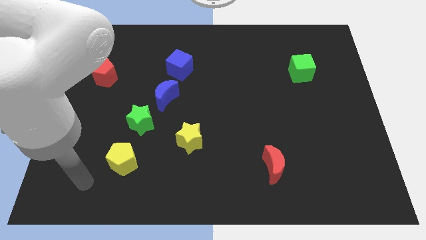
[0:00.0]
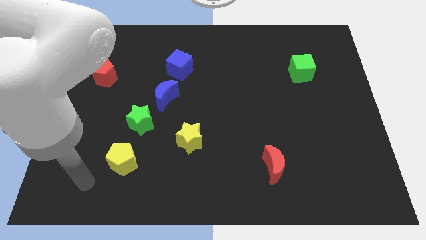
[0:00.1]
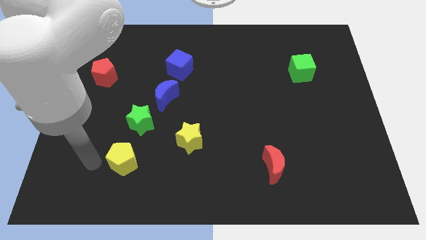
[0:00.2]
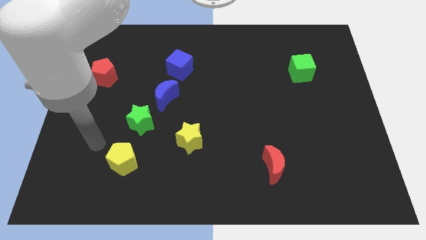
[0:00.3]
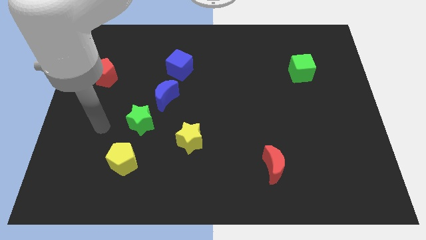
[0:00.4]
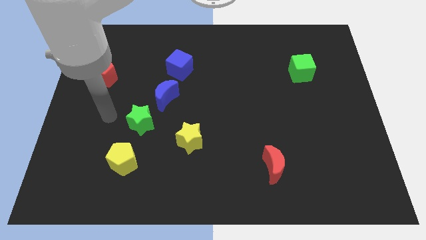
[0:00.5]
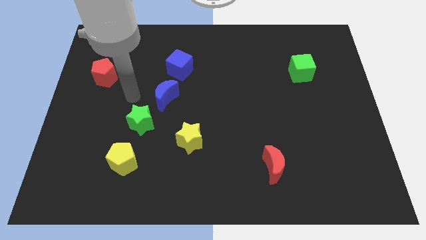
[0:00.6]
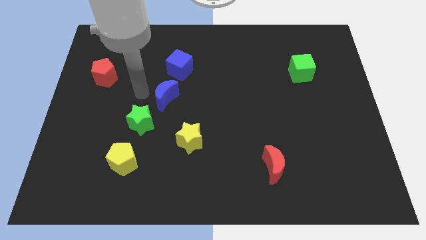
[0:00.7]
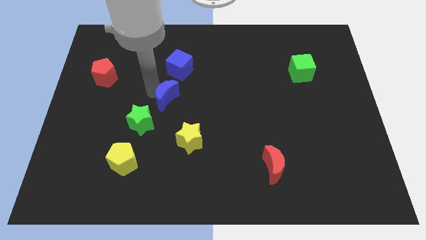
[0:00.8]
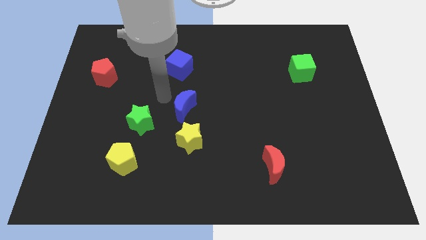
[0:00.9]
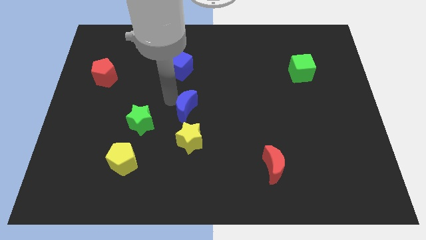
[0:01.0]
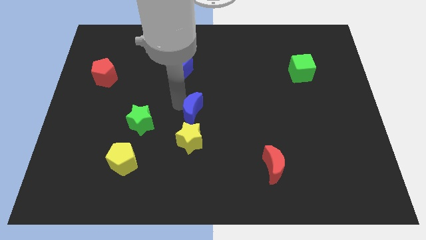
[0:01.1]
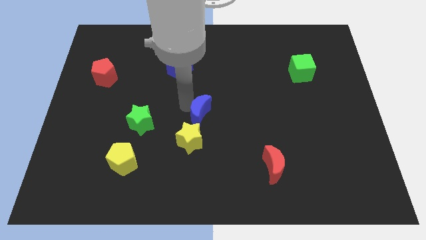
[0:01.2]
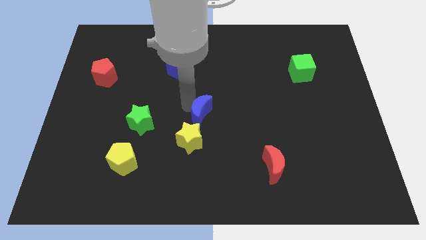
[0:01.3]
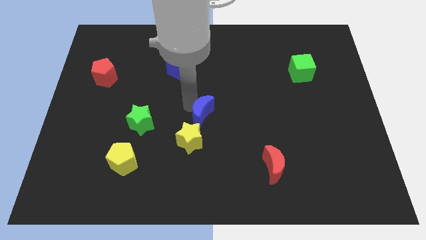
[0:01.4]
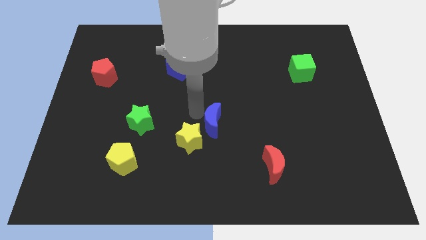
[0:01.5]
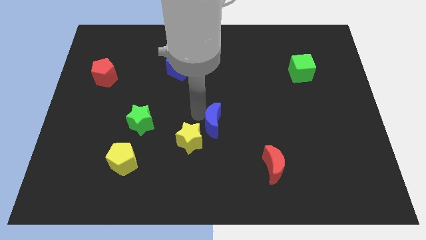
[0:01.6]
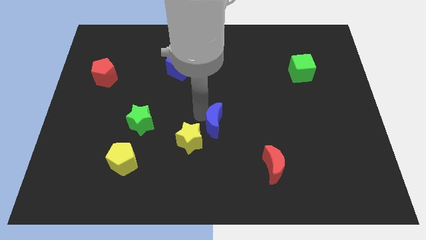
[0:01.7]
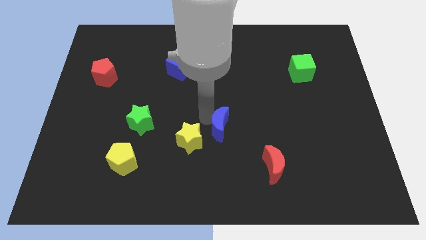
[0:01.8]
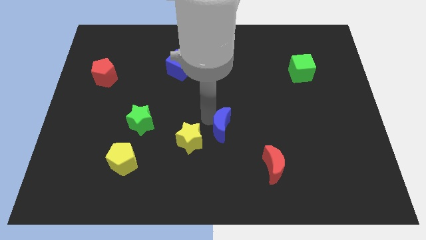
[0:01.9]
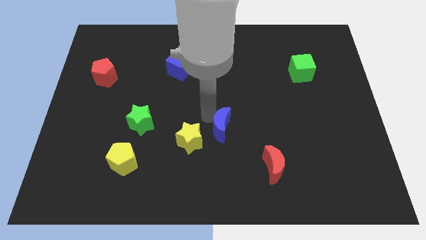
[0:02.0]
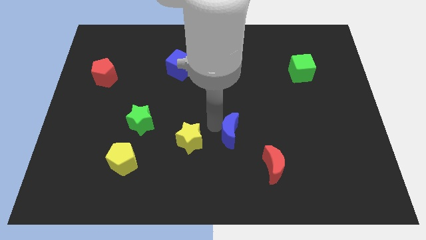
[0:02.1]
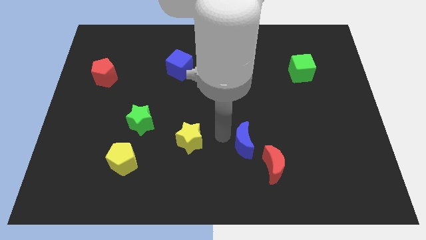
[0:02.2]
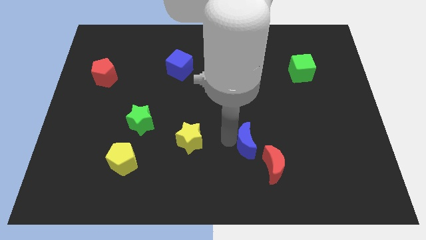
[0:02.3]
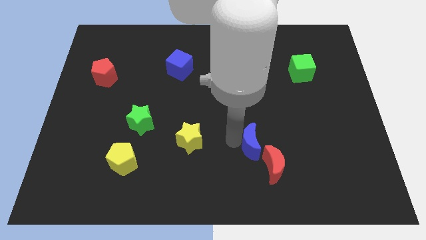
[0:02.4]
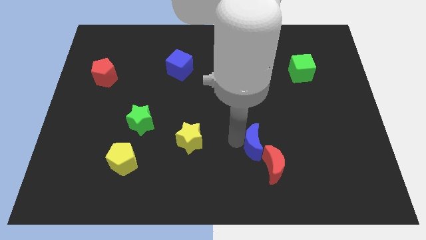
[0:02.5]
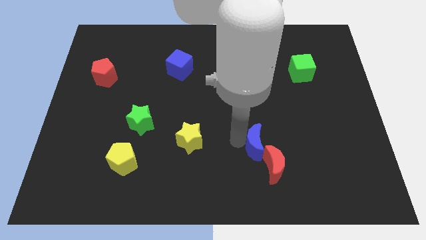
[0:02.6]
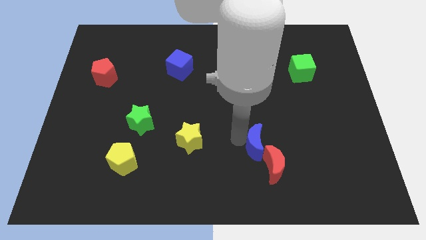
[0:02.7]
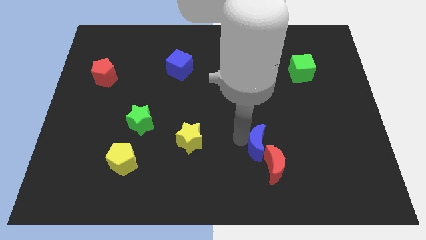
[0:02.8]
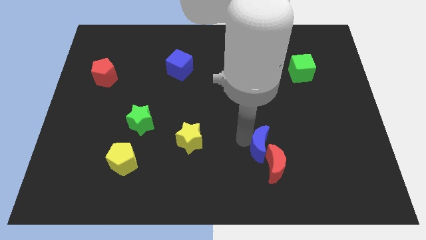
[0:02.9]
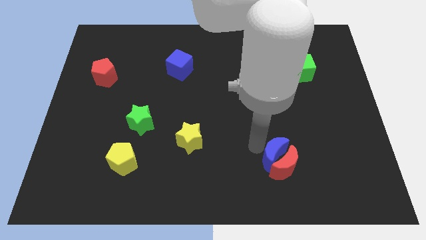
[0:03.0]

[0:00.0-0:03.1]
put the blue moon close to the red moon

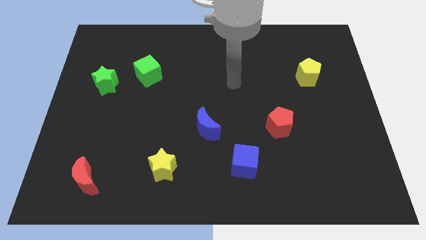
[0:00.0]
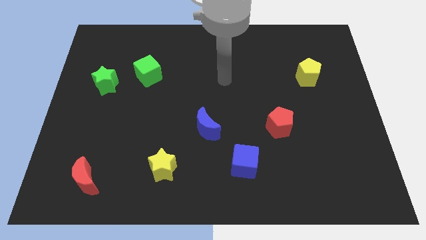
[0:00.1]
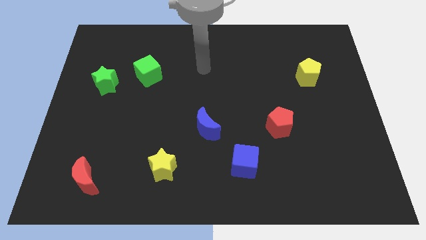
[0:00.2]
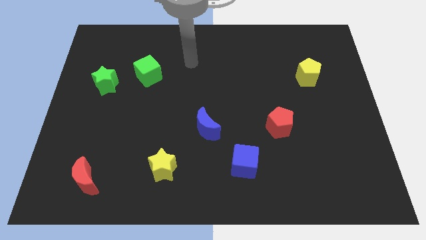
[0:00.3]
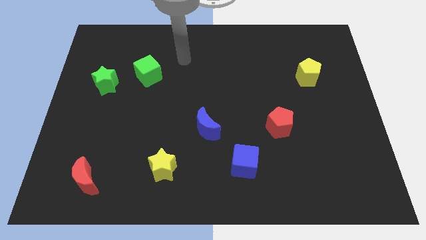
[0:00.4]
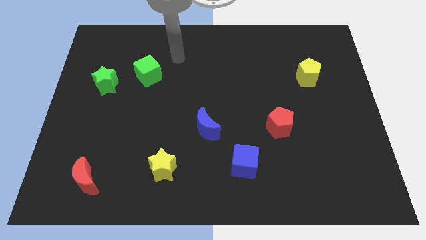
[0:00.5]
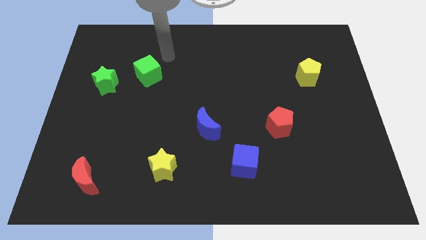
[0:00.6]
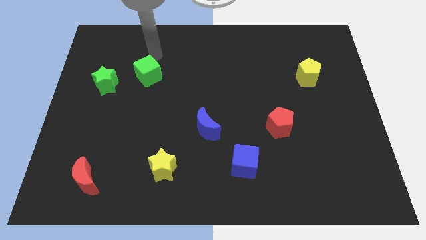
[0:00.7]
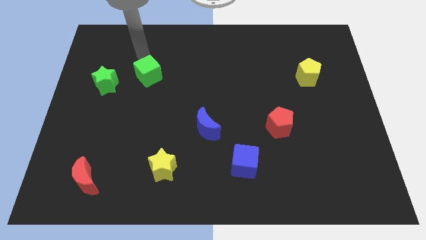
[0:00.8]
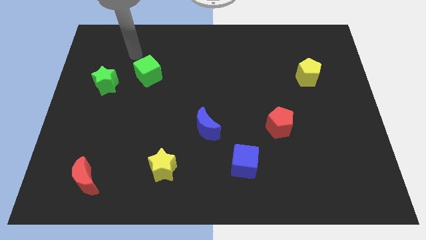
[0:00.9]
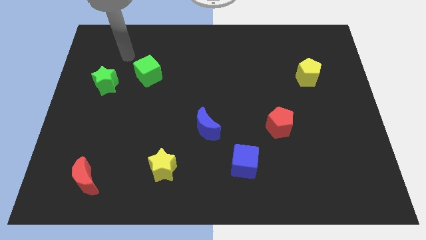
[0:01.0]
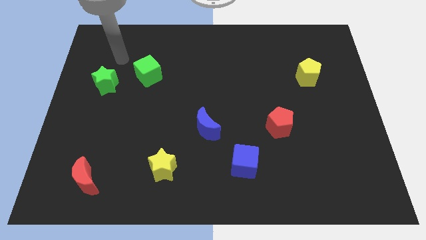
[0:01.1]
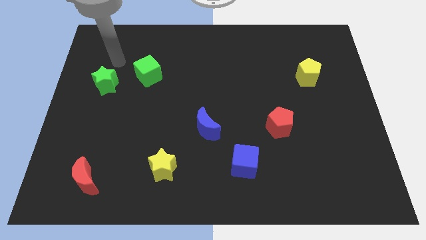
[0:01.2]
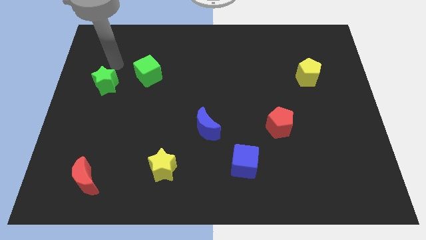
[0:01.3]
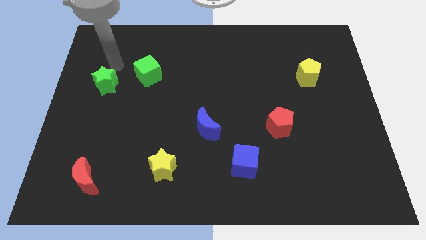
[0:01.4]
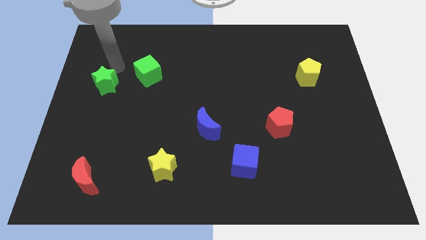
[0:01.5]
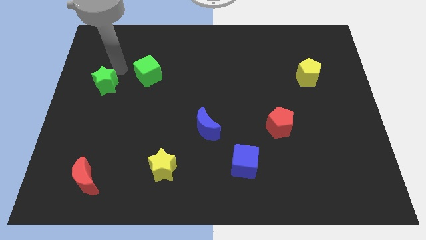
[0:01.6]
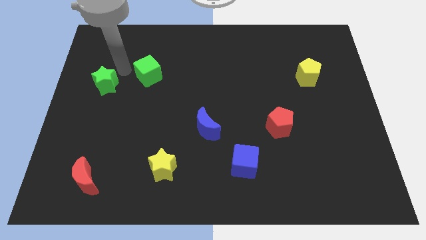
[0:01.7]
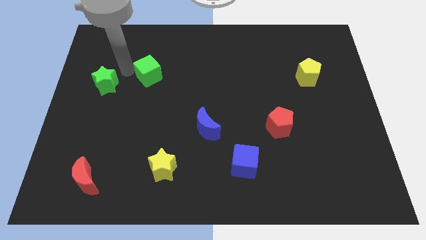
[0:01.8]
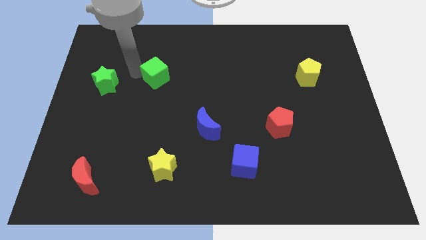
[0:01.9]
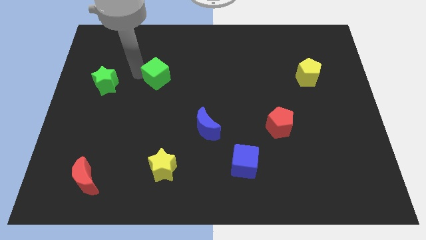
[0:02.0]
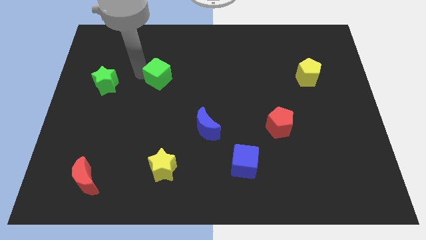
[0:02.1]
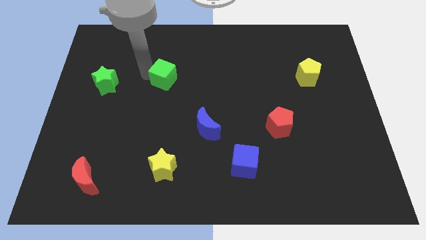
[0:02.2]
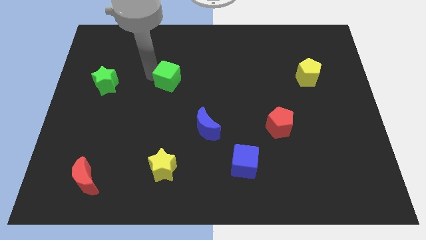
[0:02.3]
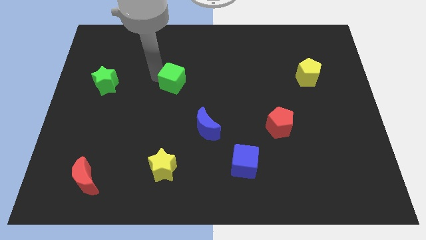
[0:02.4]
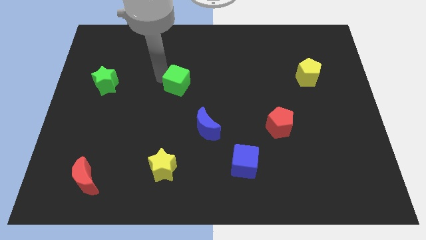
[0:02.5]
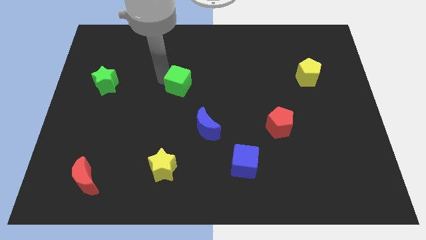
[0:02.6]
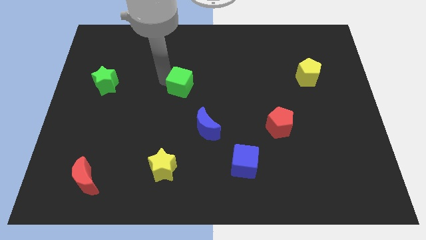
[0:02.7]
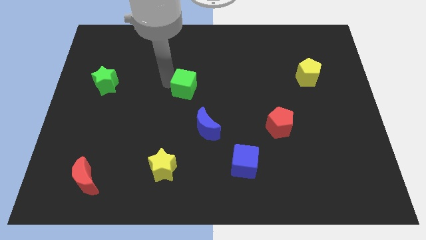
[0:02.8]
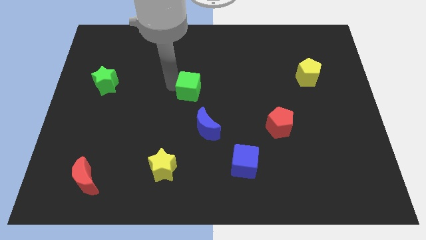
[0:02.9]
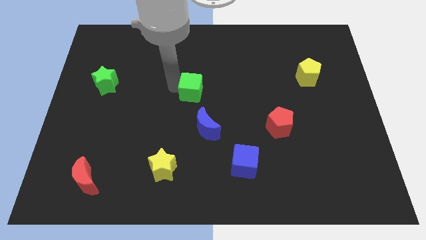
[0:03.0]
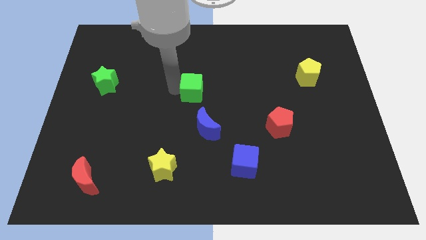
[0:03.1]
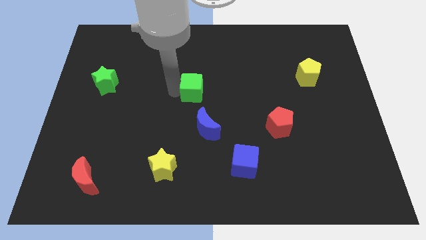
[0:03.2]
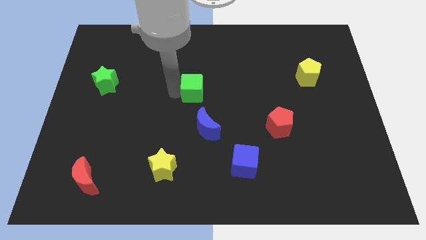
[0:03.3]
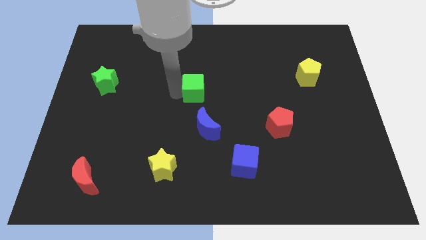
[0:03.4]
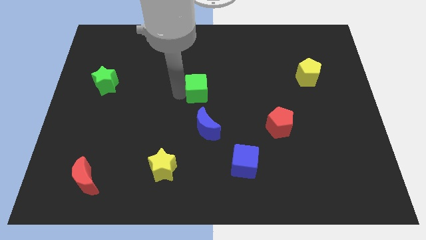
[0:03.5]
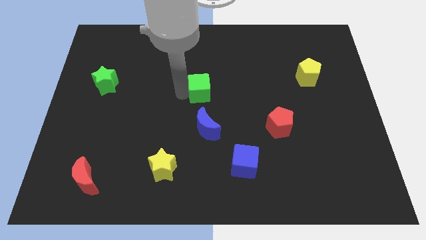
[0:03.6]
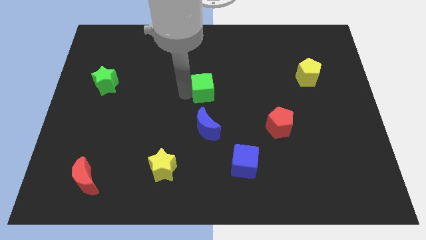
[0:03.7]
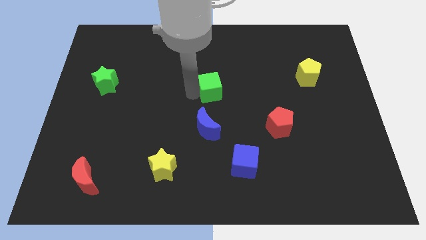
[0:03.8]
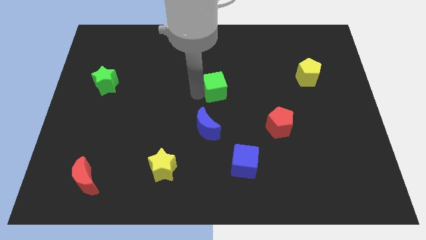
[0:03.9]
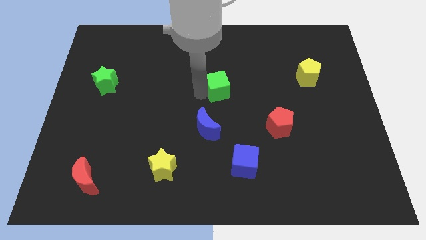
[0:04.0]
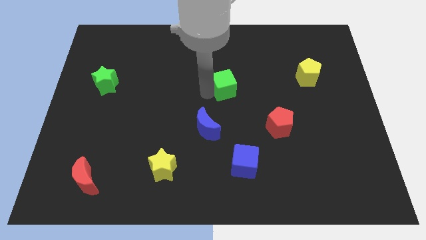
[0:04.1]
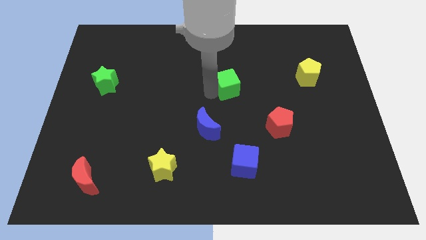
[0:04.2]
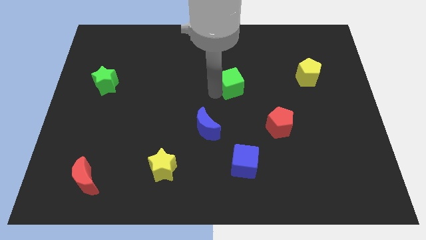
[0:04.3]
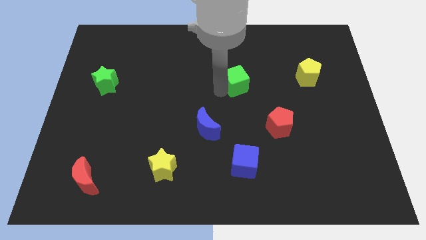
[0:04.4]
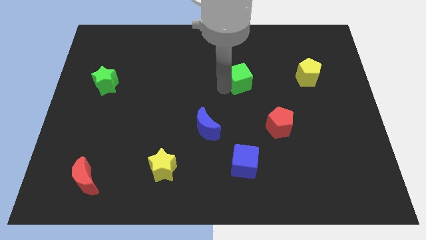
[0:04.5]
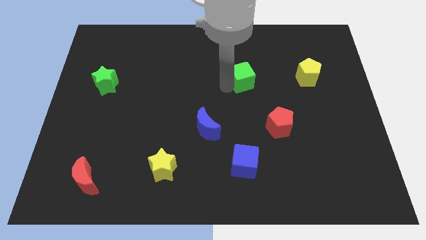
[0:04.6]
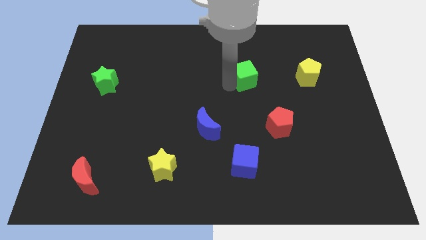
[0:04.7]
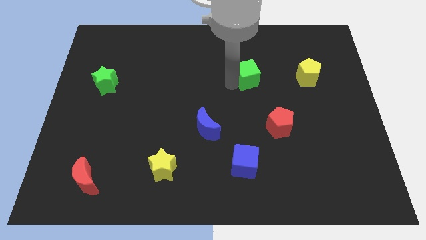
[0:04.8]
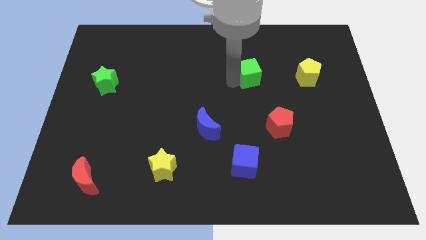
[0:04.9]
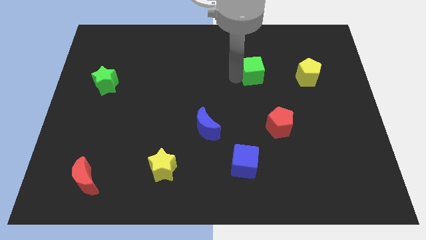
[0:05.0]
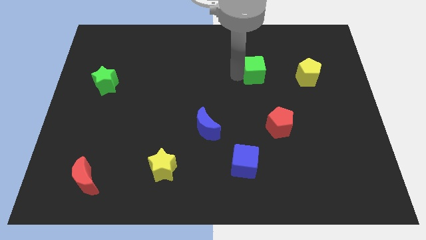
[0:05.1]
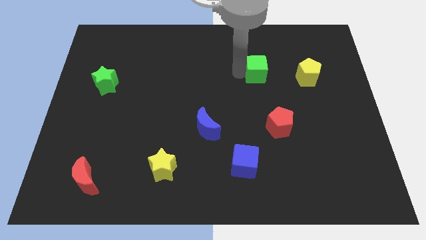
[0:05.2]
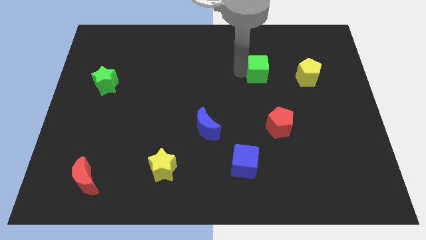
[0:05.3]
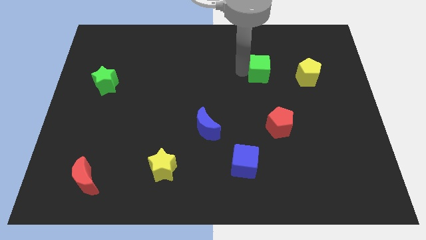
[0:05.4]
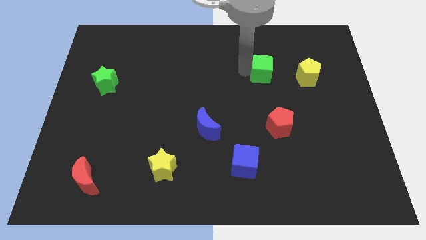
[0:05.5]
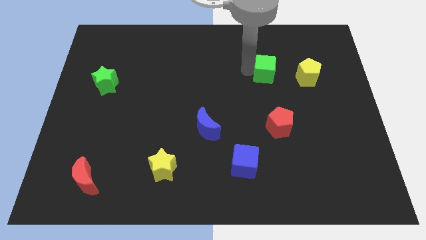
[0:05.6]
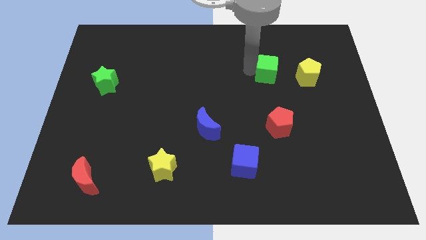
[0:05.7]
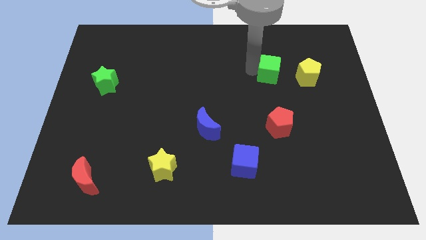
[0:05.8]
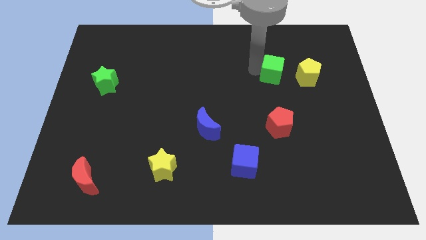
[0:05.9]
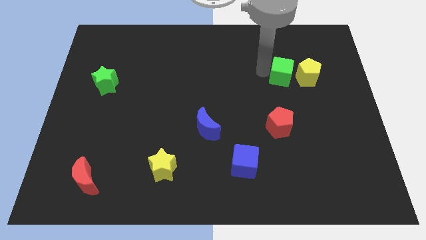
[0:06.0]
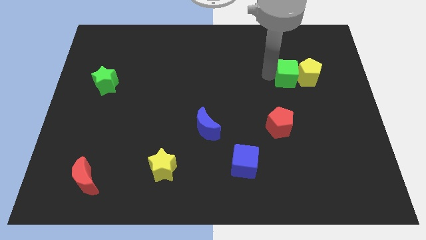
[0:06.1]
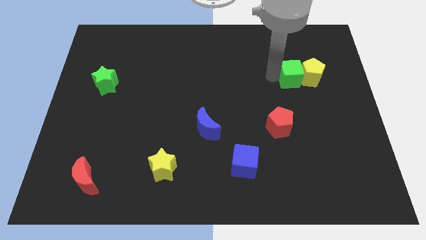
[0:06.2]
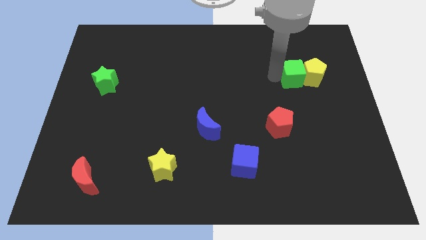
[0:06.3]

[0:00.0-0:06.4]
push the green cube close to the yellow pentagon
